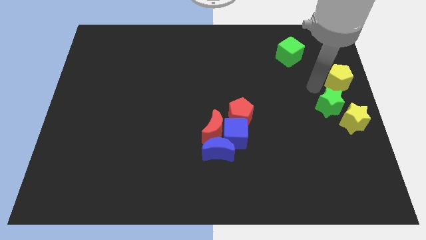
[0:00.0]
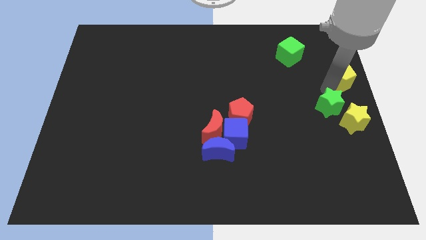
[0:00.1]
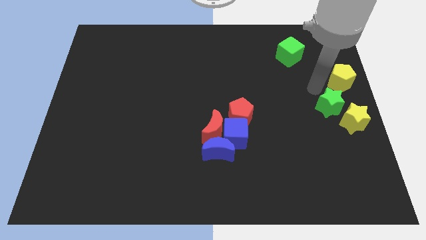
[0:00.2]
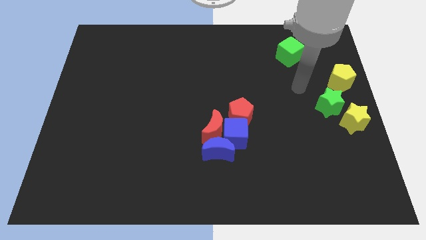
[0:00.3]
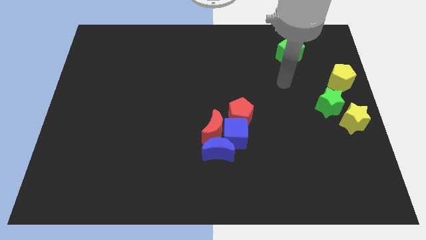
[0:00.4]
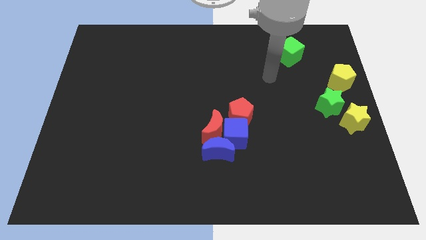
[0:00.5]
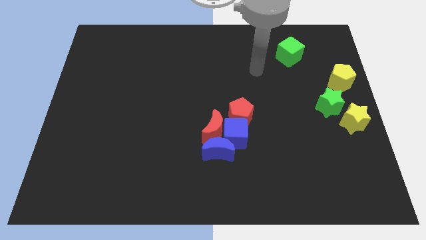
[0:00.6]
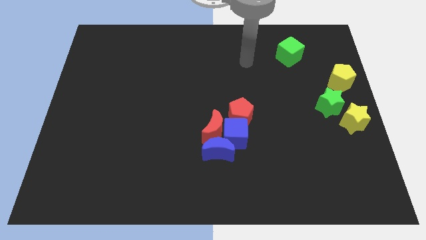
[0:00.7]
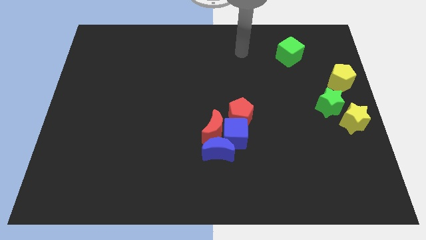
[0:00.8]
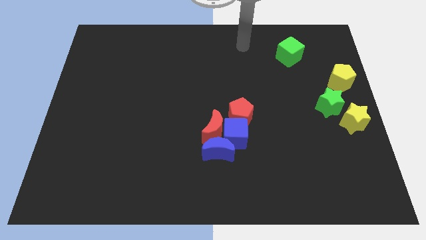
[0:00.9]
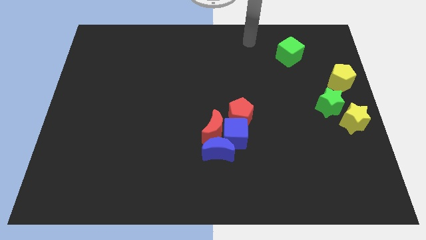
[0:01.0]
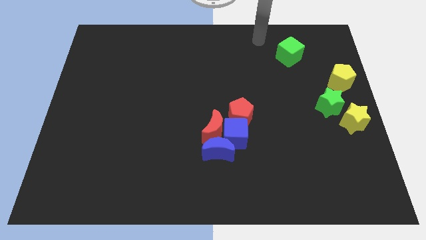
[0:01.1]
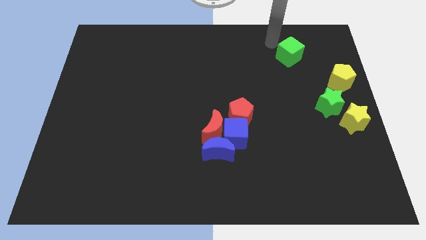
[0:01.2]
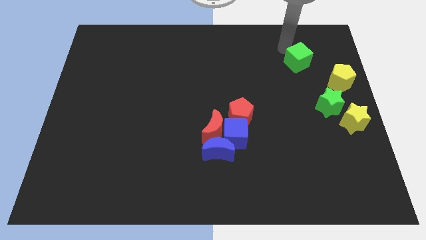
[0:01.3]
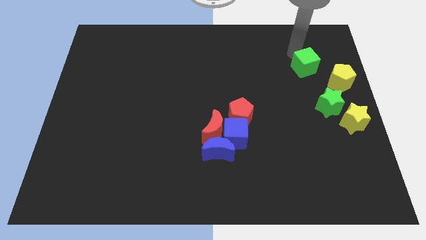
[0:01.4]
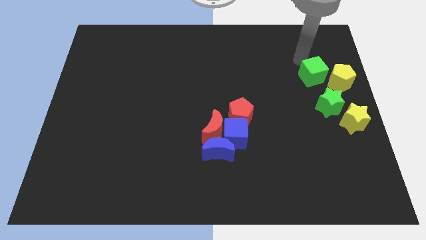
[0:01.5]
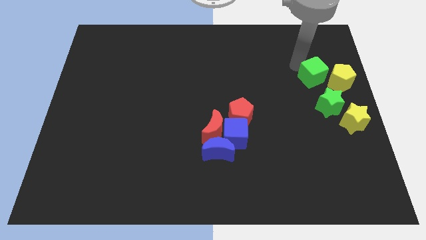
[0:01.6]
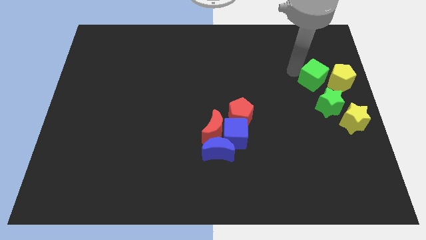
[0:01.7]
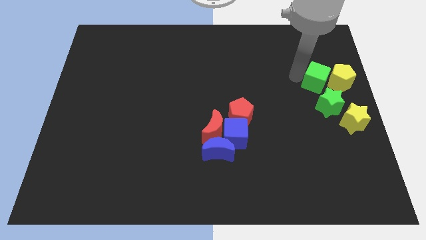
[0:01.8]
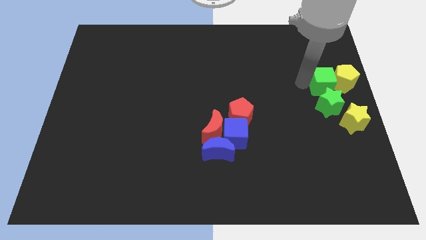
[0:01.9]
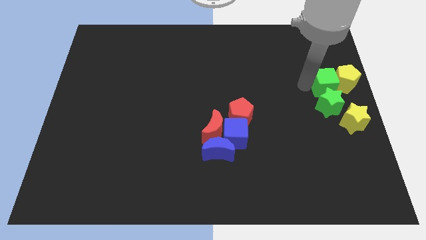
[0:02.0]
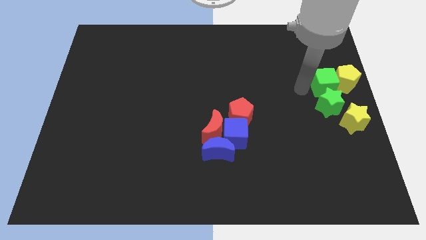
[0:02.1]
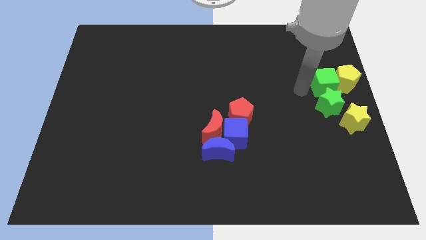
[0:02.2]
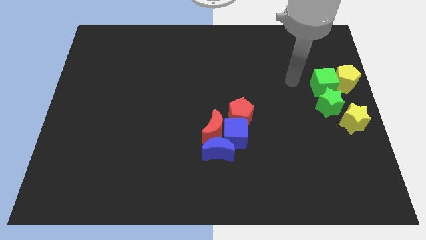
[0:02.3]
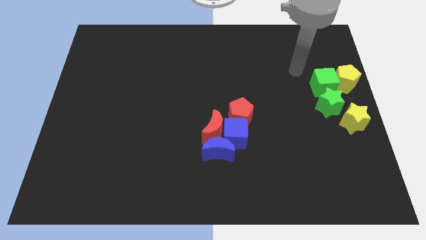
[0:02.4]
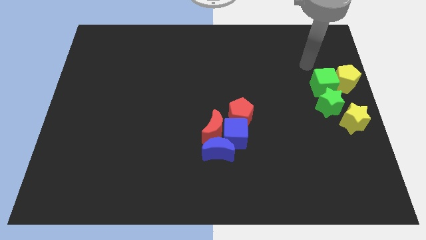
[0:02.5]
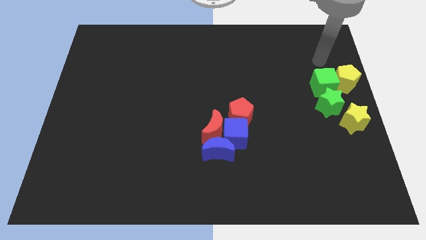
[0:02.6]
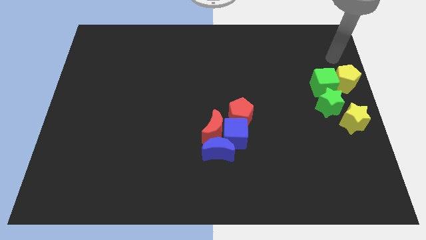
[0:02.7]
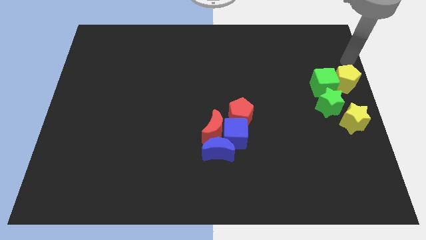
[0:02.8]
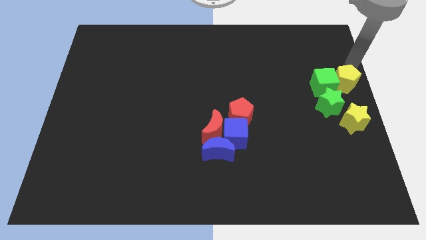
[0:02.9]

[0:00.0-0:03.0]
push the green cube into the left side of the yellow pentagon

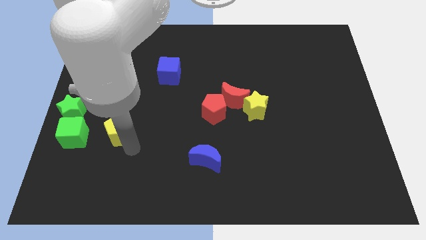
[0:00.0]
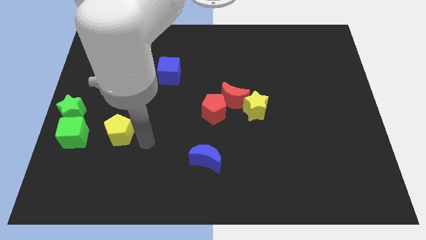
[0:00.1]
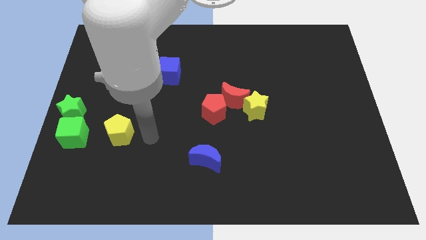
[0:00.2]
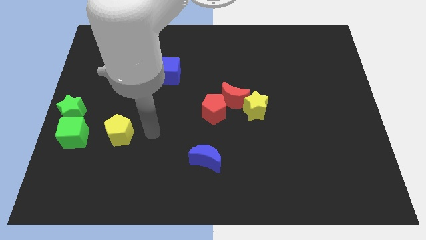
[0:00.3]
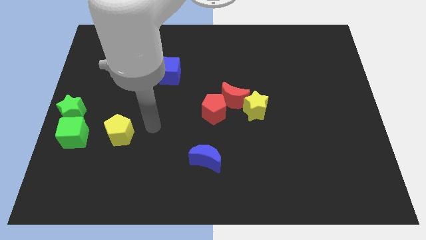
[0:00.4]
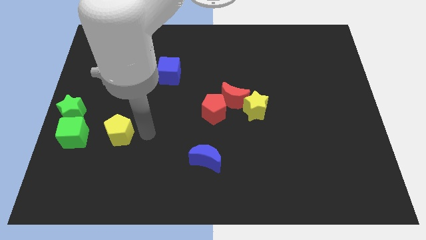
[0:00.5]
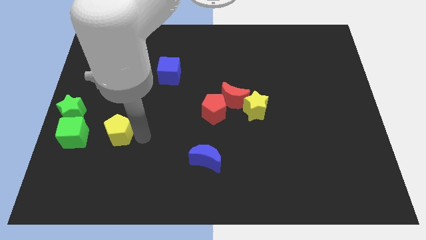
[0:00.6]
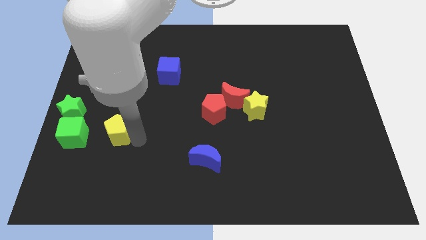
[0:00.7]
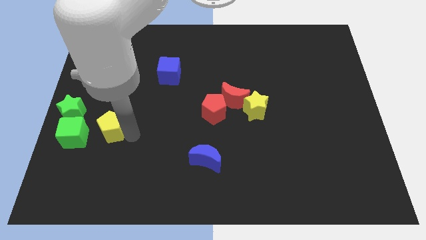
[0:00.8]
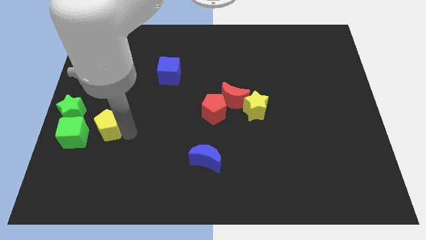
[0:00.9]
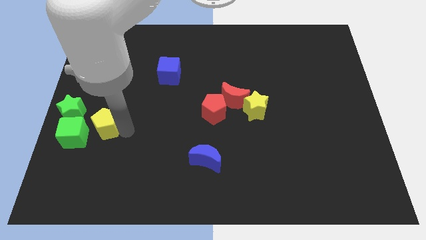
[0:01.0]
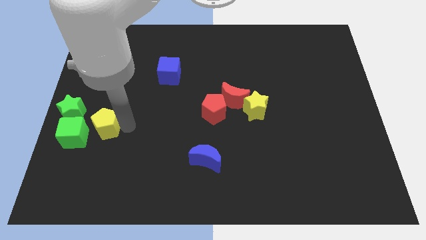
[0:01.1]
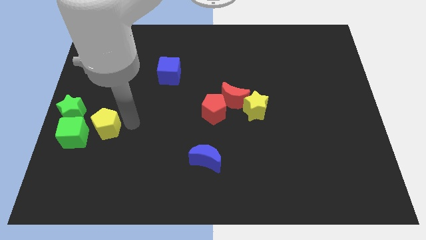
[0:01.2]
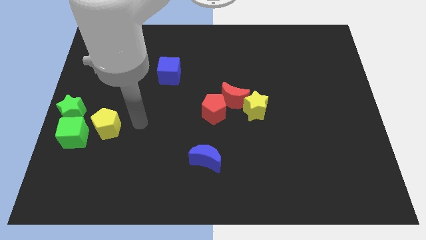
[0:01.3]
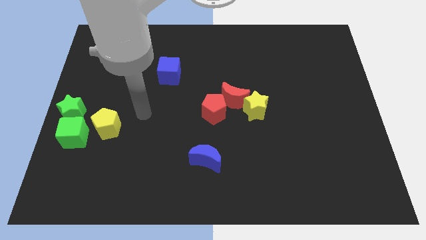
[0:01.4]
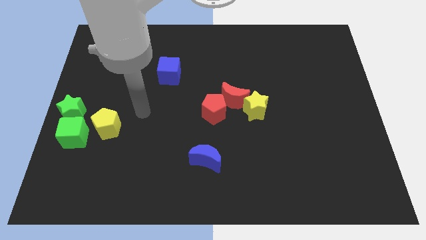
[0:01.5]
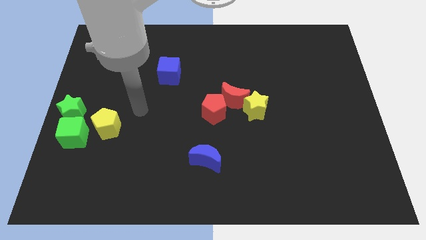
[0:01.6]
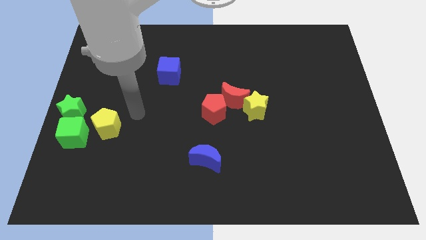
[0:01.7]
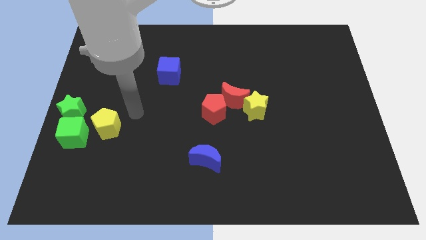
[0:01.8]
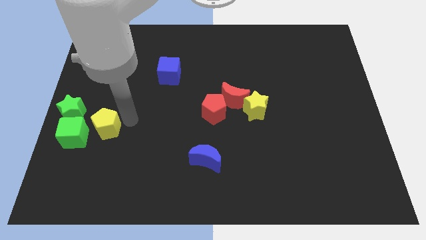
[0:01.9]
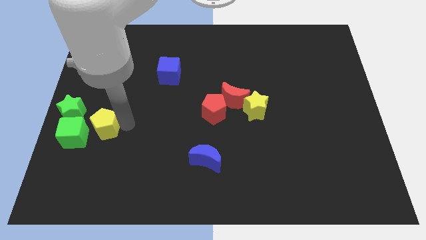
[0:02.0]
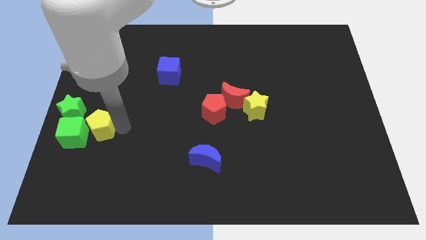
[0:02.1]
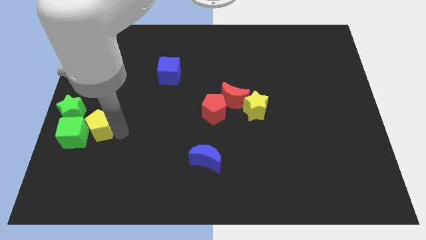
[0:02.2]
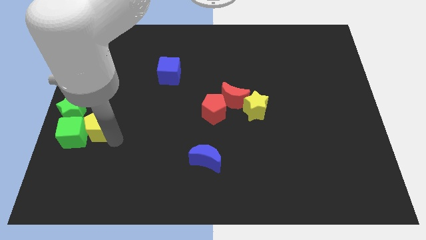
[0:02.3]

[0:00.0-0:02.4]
push the yellow pentagon into the green cube

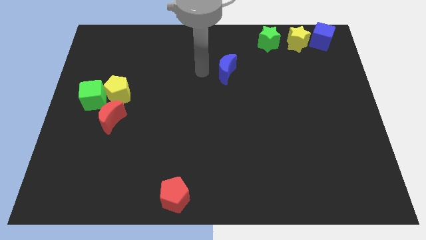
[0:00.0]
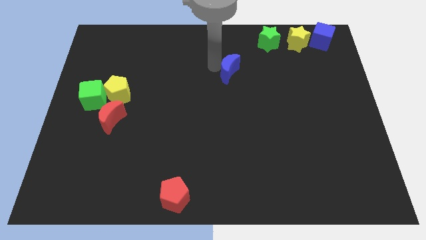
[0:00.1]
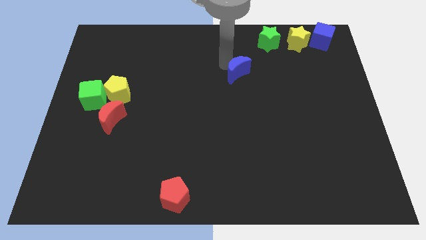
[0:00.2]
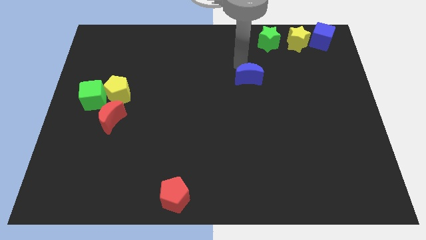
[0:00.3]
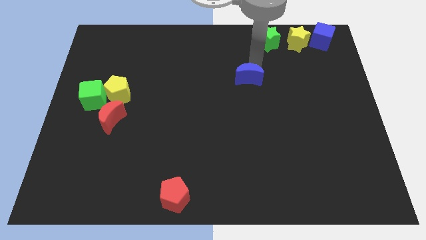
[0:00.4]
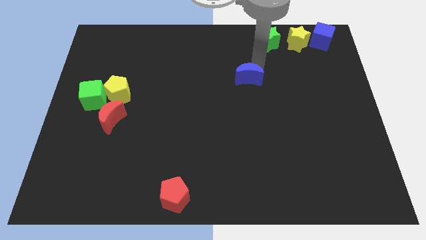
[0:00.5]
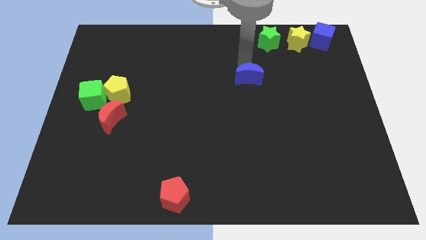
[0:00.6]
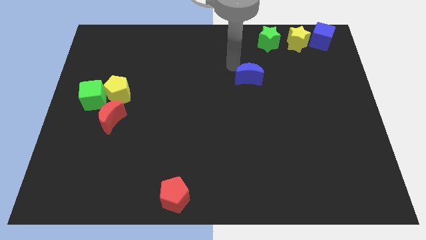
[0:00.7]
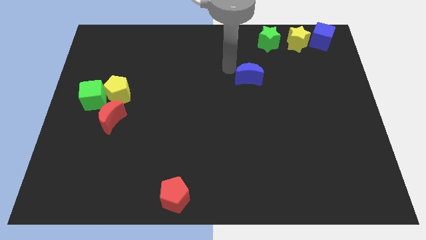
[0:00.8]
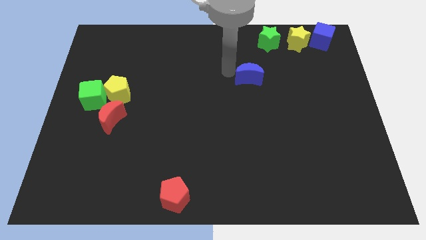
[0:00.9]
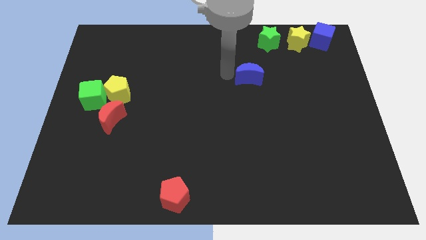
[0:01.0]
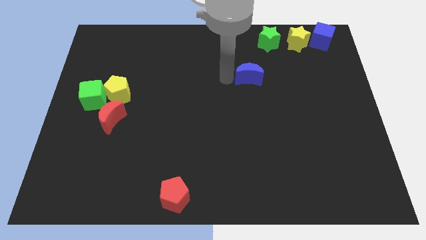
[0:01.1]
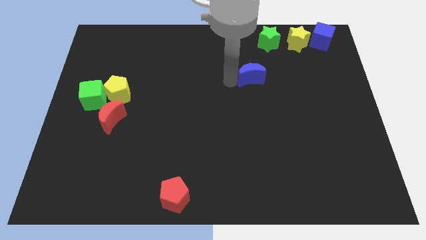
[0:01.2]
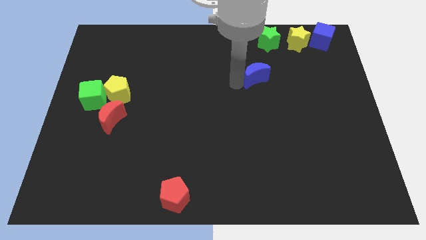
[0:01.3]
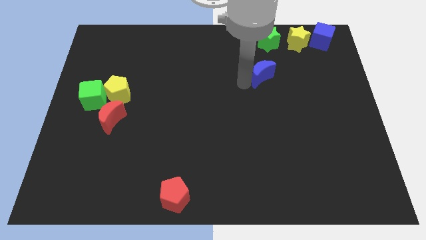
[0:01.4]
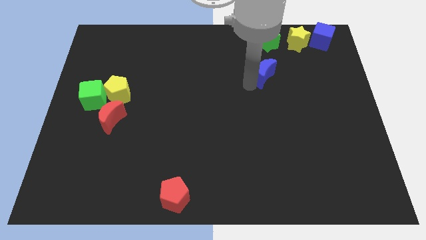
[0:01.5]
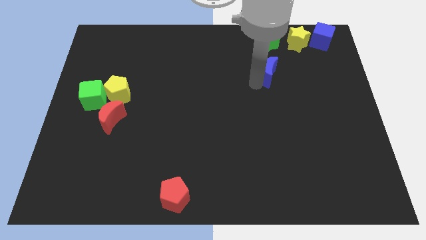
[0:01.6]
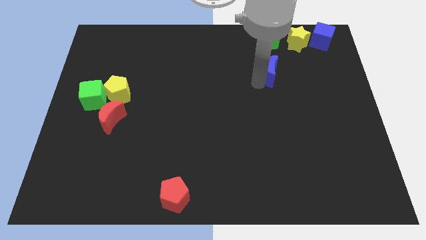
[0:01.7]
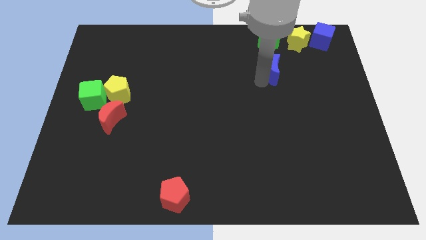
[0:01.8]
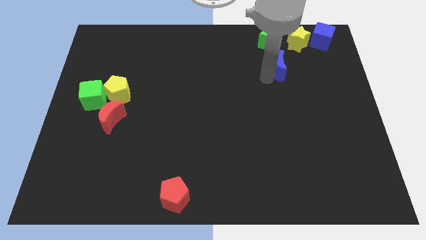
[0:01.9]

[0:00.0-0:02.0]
push blue crescent below green star

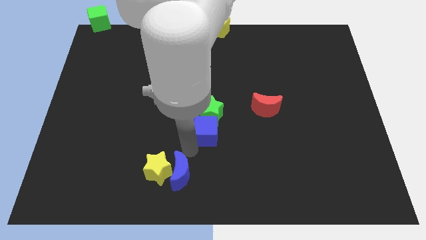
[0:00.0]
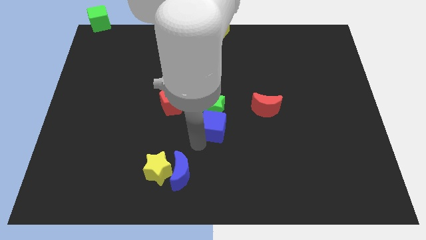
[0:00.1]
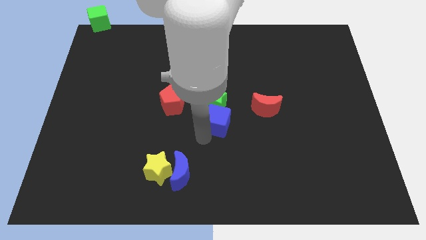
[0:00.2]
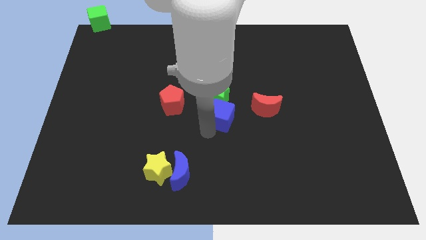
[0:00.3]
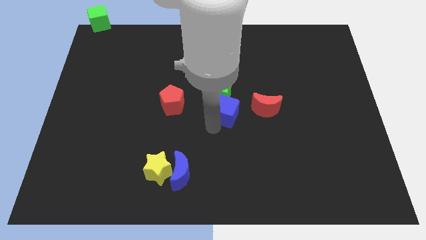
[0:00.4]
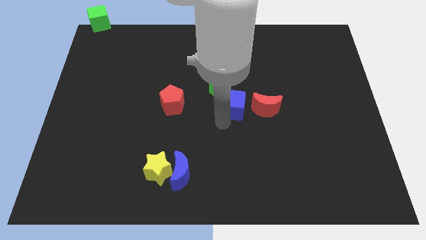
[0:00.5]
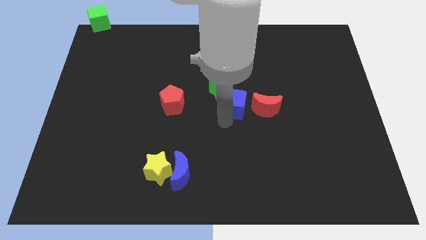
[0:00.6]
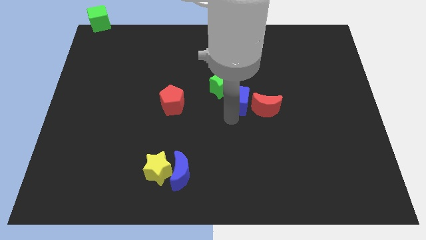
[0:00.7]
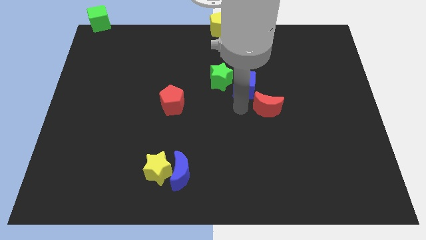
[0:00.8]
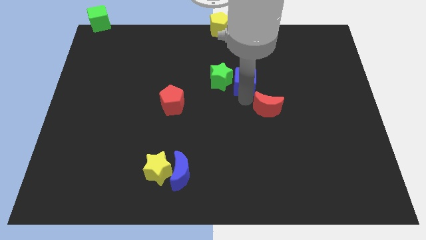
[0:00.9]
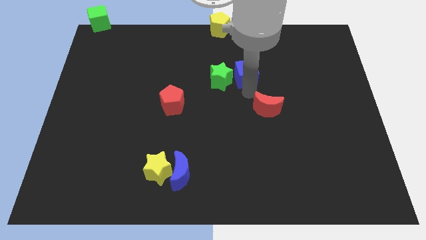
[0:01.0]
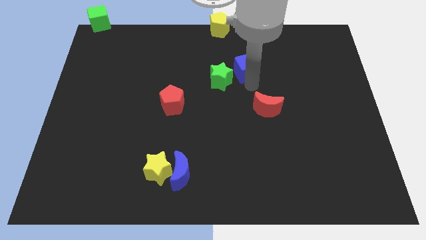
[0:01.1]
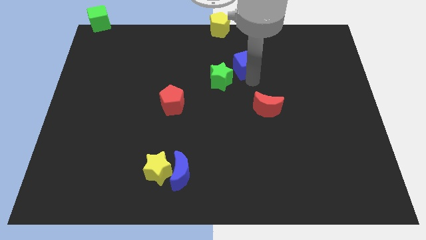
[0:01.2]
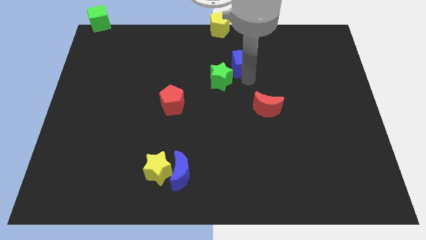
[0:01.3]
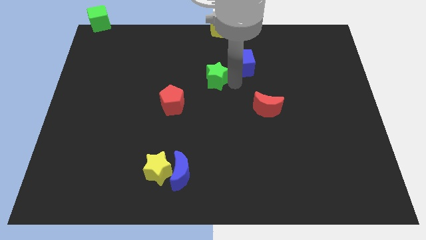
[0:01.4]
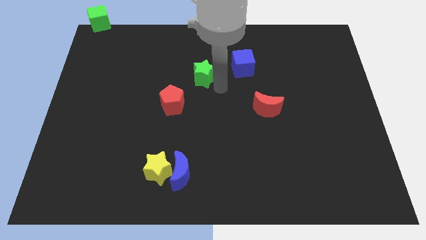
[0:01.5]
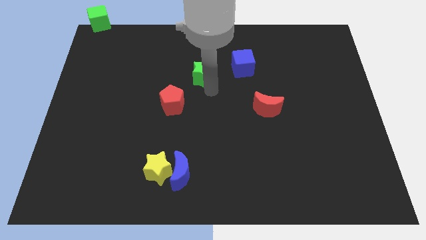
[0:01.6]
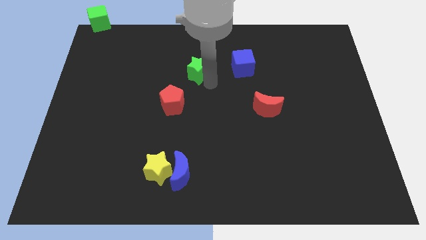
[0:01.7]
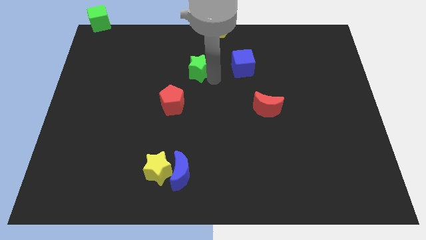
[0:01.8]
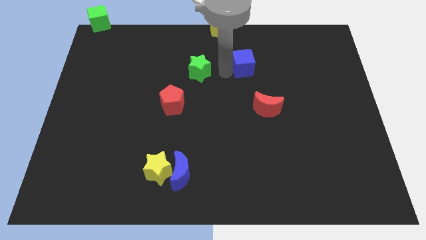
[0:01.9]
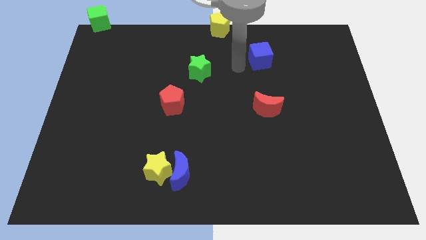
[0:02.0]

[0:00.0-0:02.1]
slide the blue cube parallel to the top center
